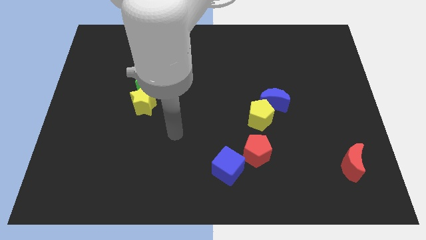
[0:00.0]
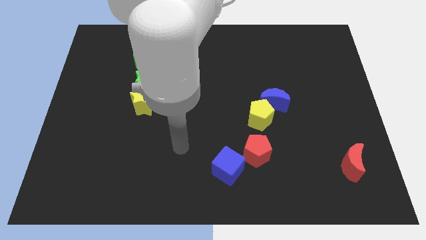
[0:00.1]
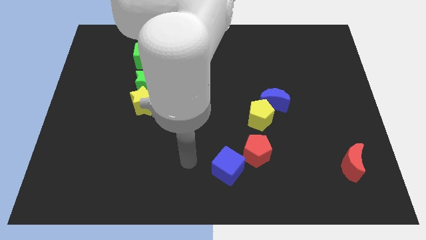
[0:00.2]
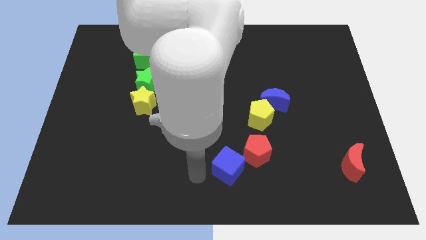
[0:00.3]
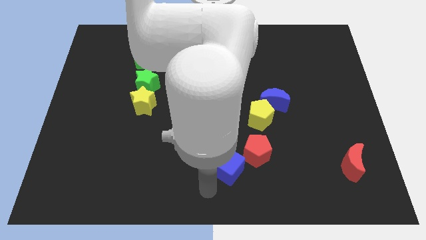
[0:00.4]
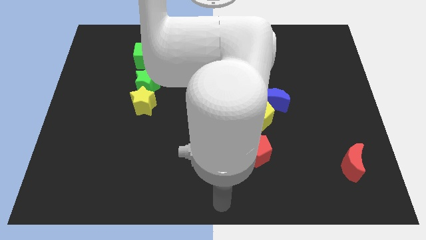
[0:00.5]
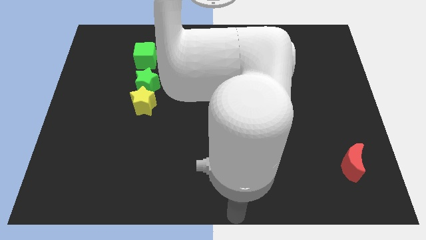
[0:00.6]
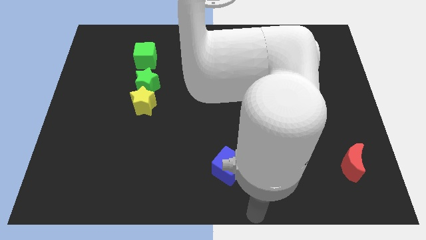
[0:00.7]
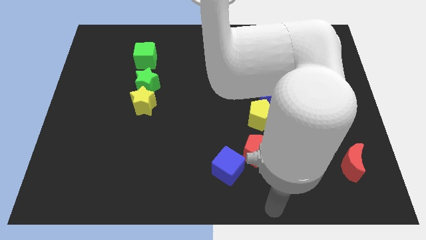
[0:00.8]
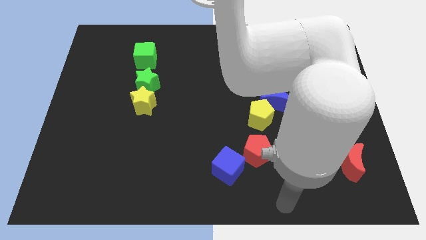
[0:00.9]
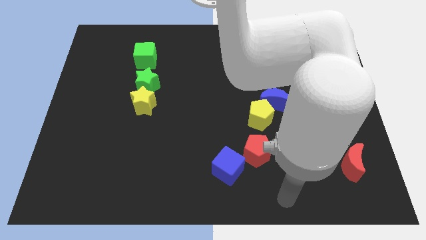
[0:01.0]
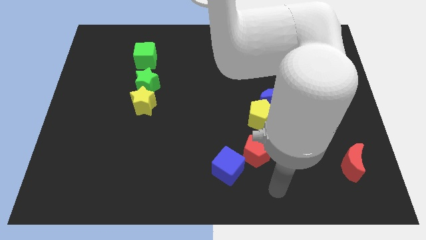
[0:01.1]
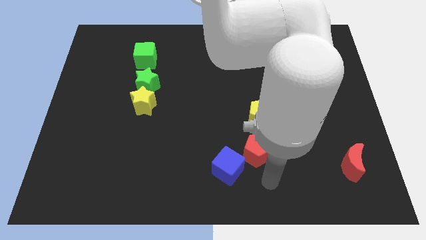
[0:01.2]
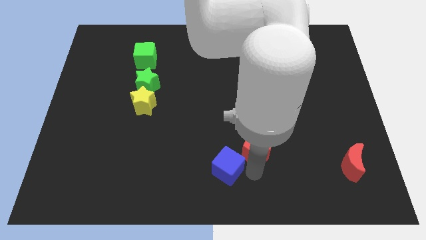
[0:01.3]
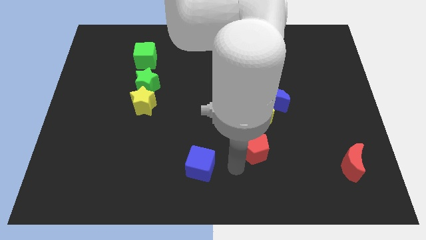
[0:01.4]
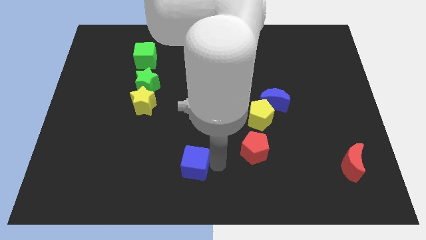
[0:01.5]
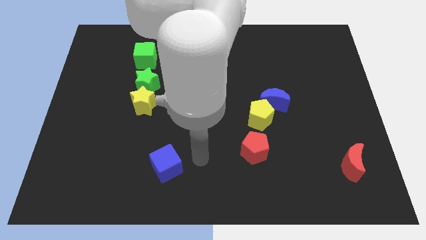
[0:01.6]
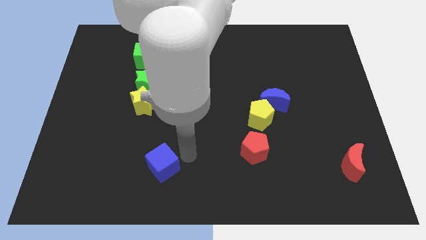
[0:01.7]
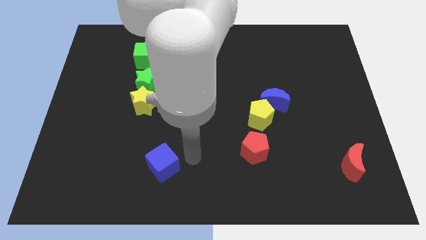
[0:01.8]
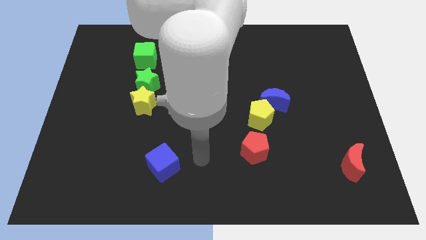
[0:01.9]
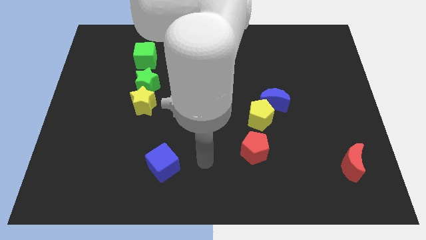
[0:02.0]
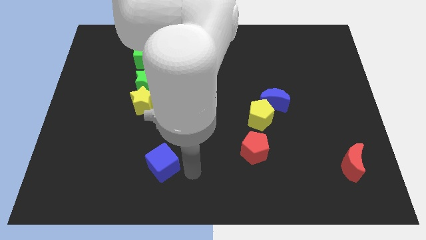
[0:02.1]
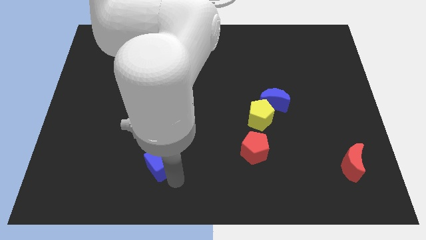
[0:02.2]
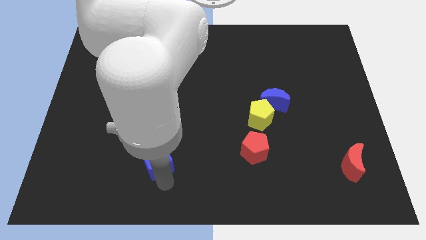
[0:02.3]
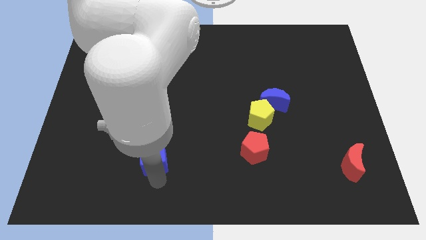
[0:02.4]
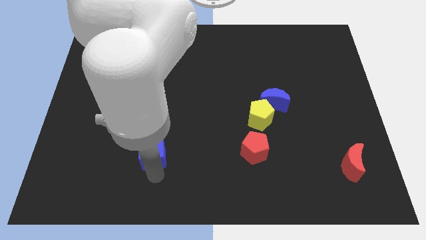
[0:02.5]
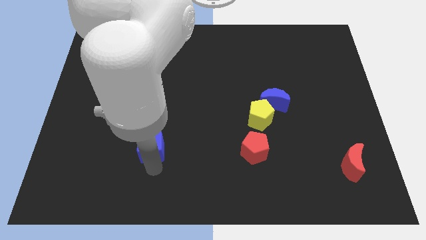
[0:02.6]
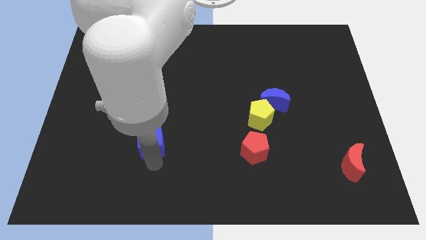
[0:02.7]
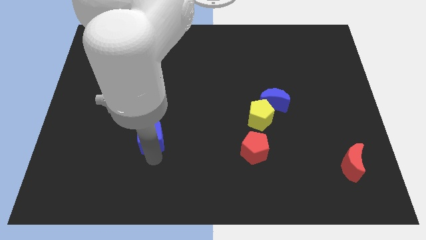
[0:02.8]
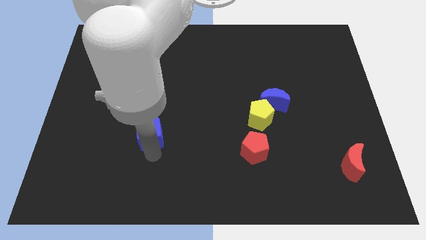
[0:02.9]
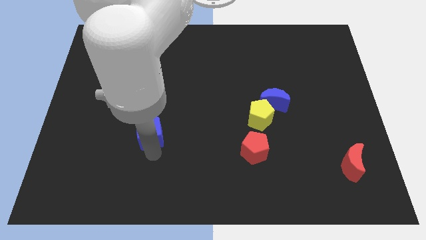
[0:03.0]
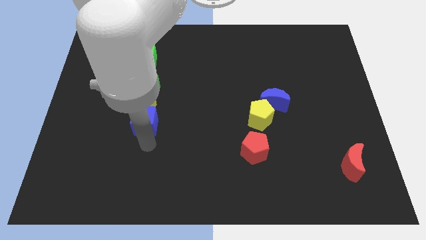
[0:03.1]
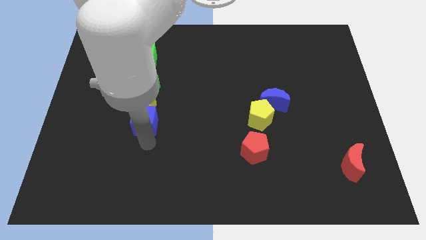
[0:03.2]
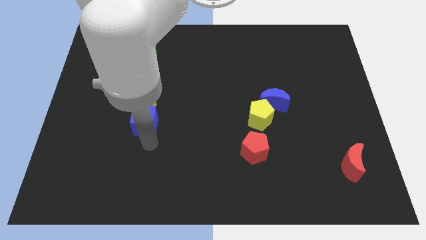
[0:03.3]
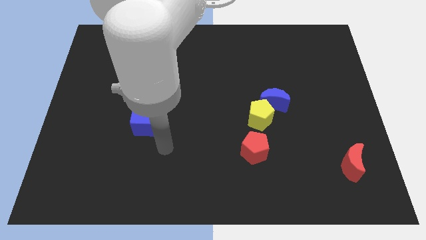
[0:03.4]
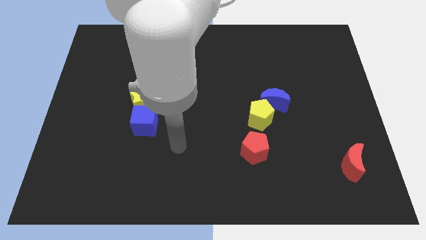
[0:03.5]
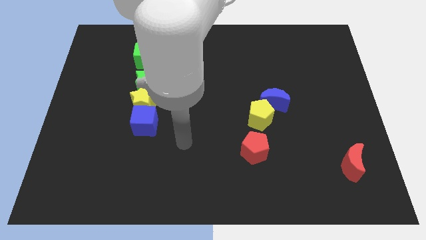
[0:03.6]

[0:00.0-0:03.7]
put the blue cube to the bottom side of the yellow star

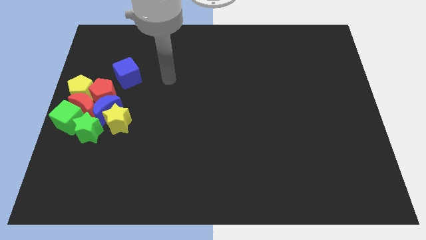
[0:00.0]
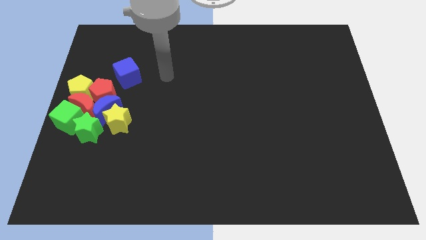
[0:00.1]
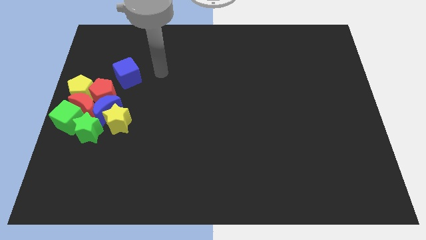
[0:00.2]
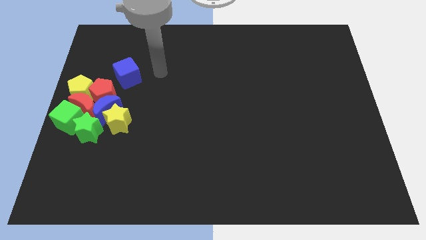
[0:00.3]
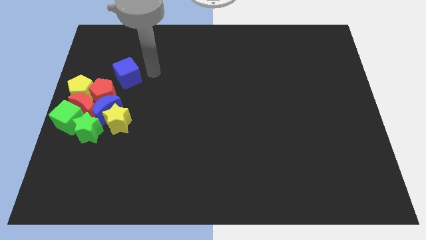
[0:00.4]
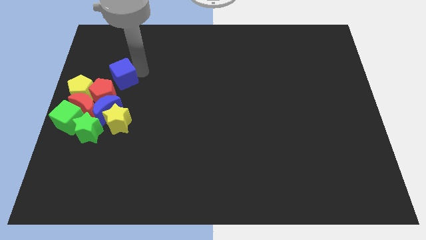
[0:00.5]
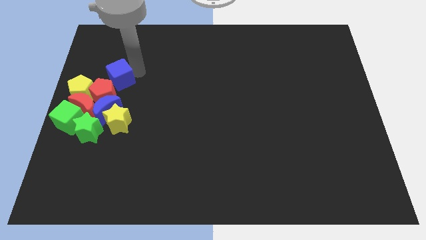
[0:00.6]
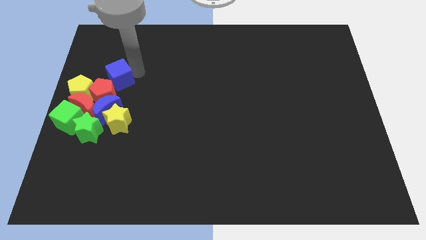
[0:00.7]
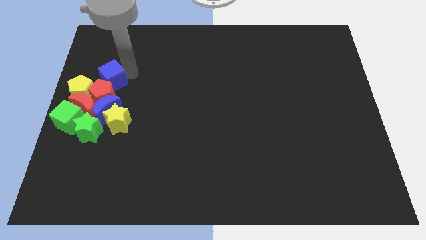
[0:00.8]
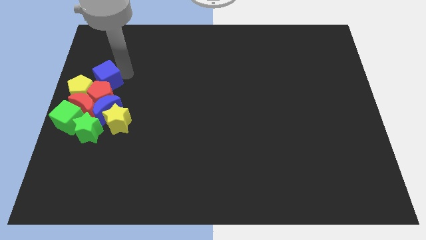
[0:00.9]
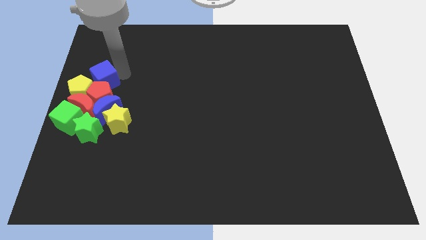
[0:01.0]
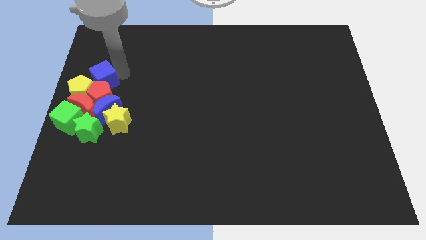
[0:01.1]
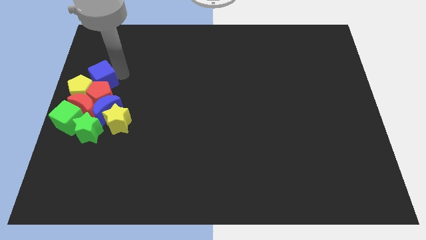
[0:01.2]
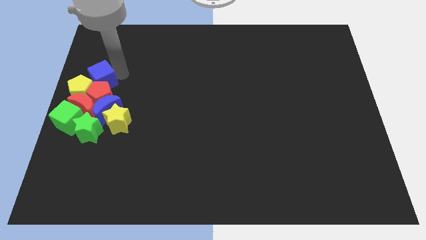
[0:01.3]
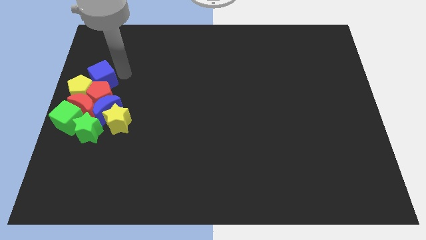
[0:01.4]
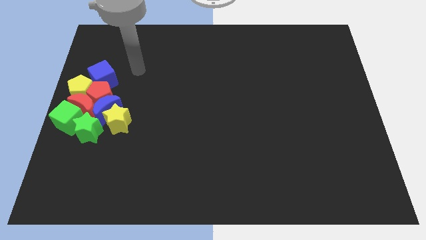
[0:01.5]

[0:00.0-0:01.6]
place the blue cube above the red pentagon

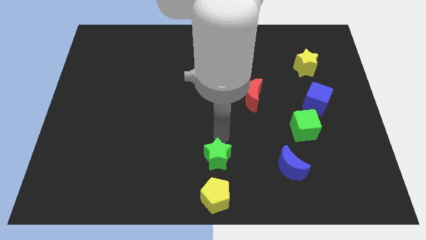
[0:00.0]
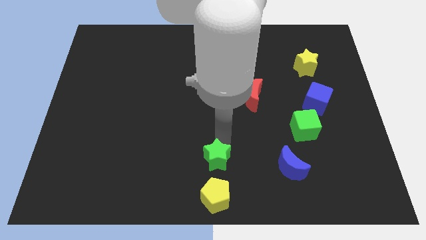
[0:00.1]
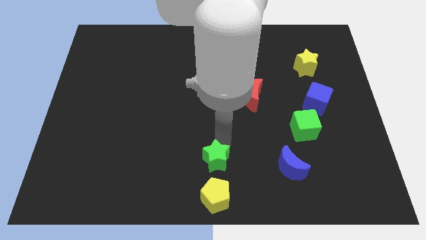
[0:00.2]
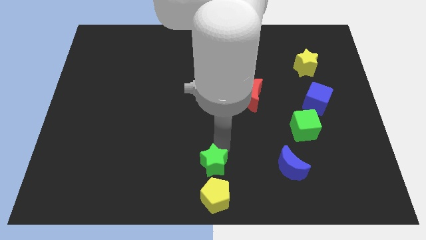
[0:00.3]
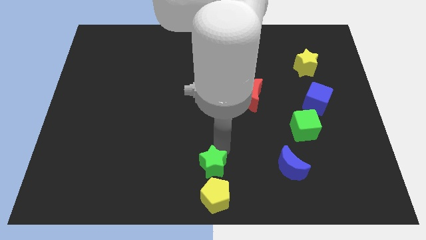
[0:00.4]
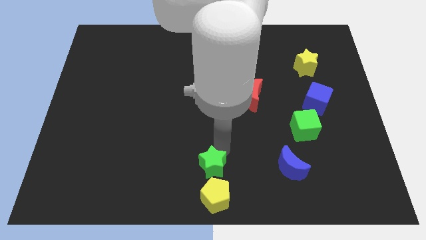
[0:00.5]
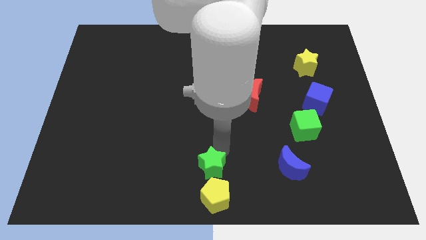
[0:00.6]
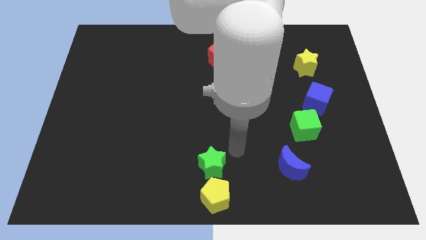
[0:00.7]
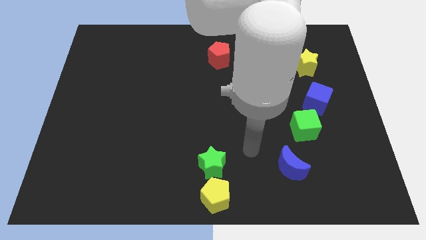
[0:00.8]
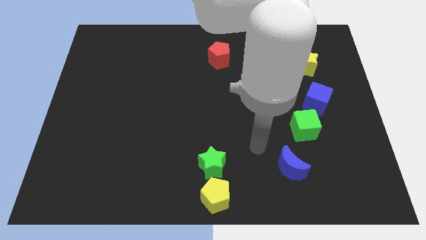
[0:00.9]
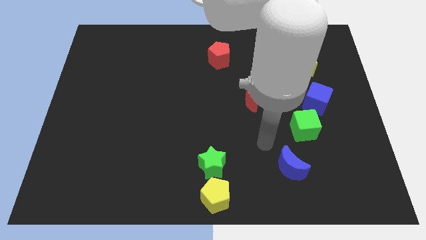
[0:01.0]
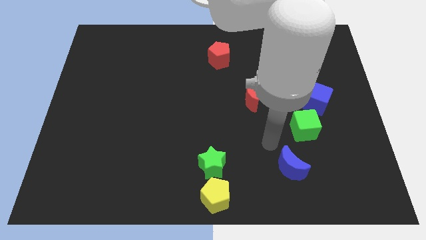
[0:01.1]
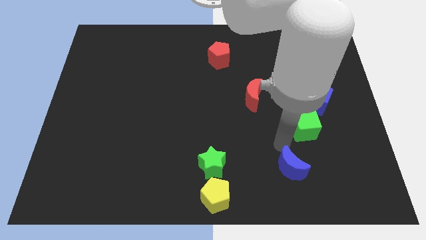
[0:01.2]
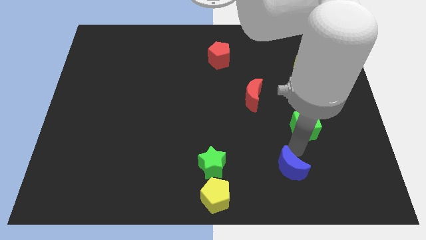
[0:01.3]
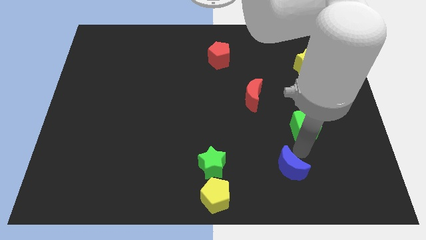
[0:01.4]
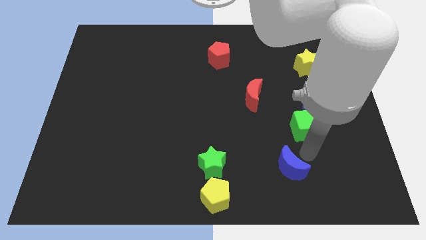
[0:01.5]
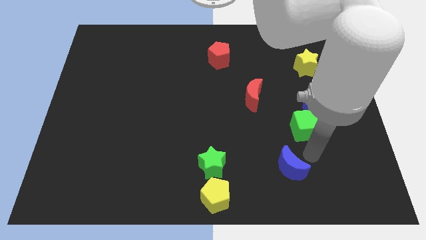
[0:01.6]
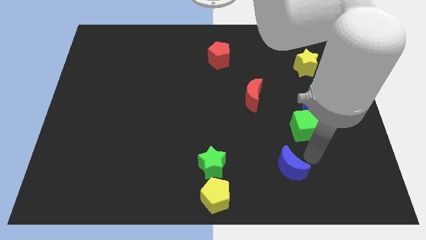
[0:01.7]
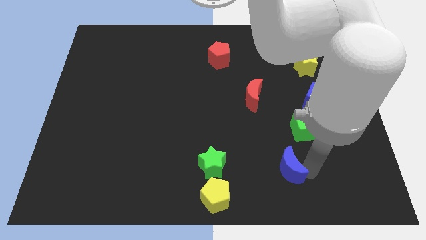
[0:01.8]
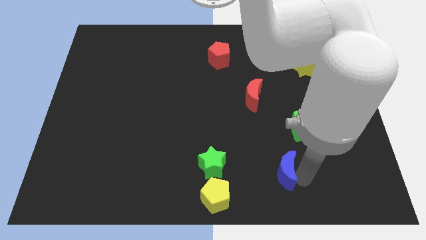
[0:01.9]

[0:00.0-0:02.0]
slightly touch your arm to the blue moon

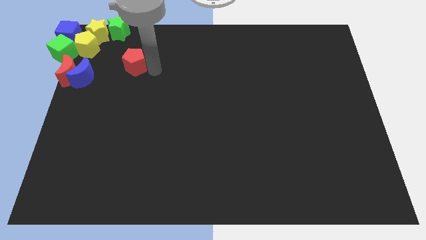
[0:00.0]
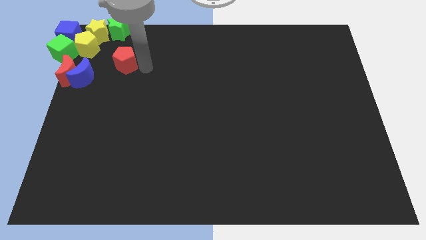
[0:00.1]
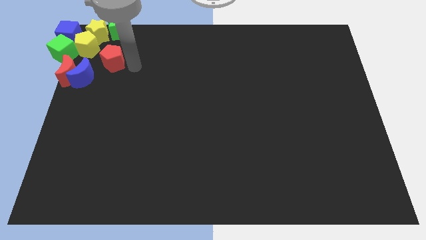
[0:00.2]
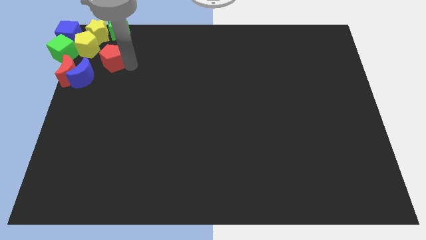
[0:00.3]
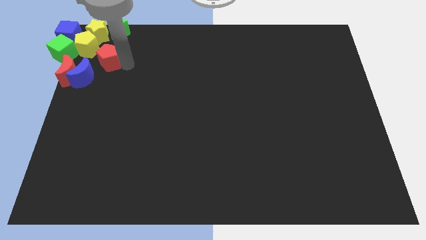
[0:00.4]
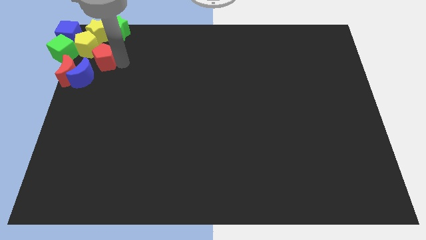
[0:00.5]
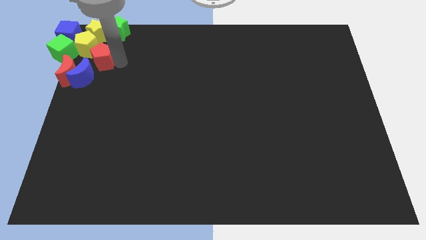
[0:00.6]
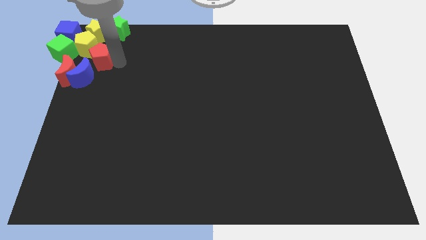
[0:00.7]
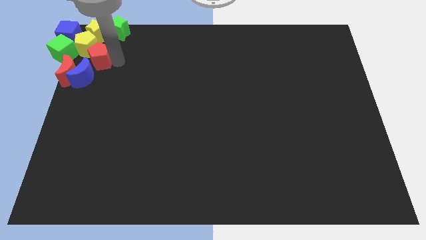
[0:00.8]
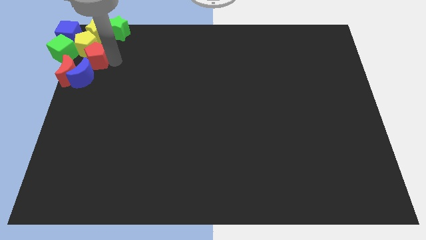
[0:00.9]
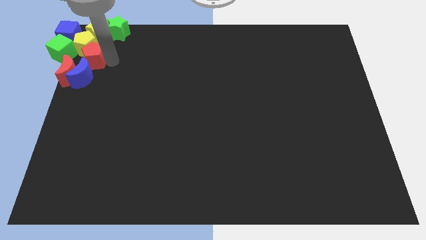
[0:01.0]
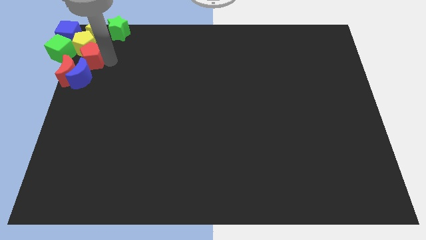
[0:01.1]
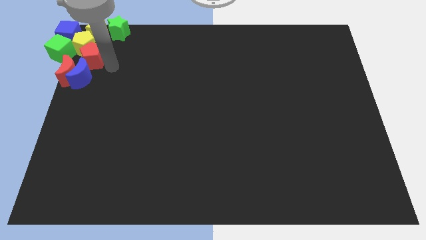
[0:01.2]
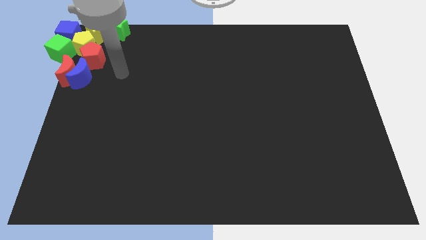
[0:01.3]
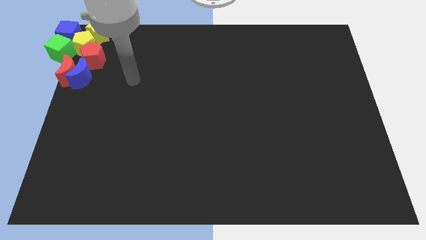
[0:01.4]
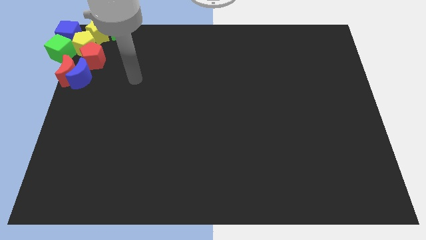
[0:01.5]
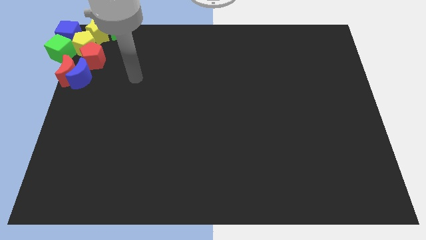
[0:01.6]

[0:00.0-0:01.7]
push the red pentagon into the yellow pentagon
